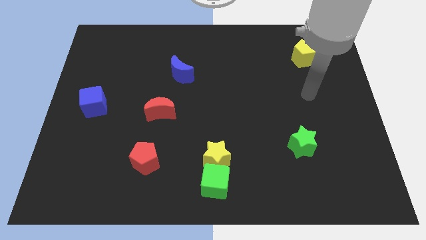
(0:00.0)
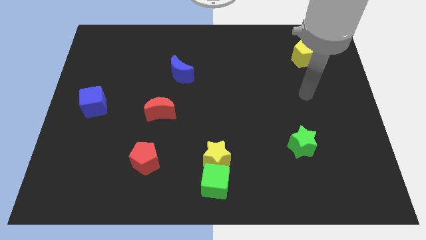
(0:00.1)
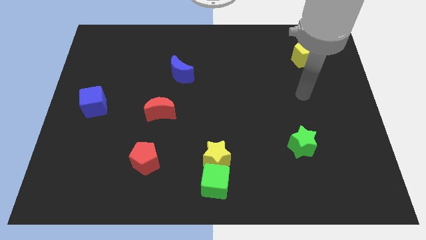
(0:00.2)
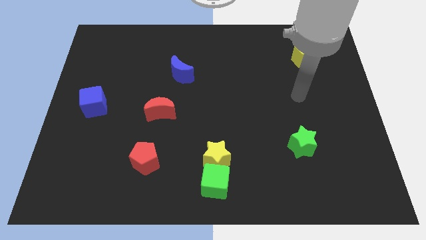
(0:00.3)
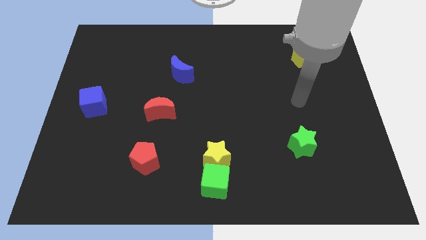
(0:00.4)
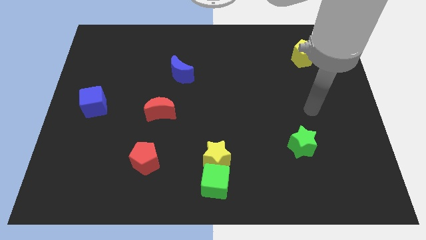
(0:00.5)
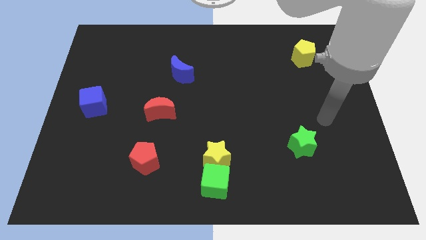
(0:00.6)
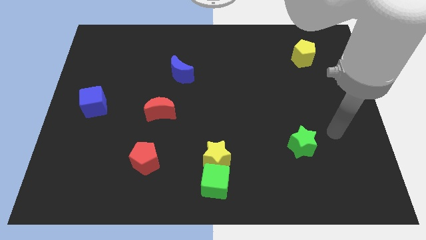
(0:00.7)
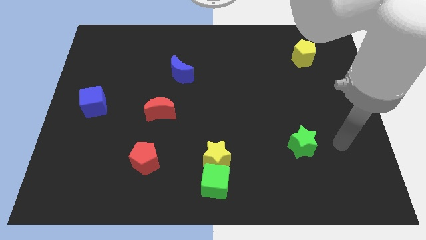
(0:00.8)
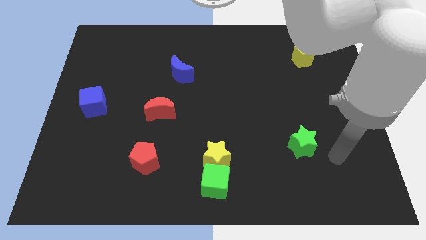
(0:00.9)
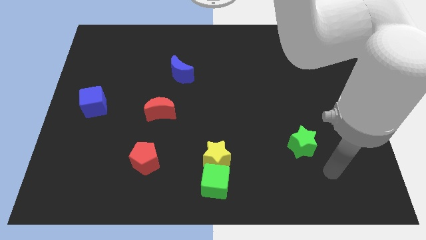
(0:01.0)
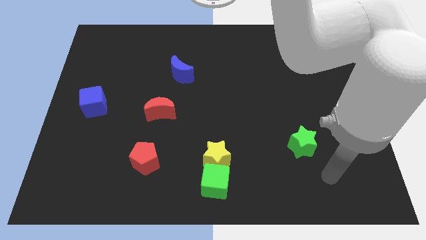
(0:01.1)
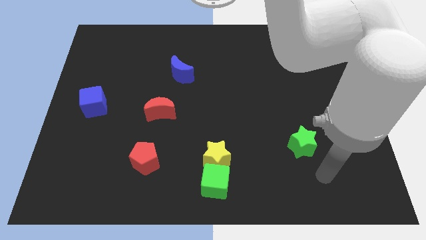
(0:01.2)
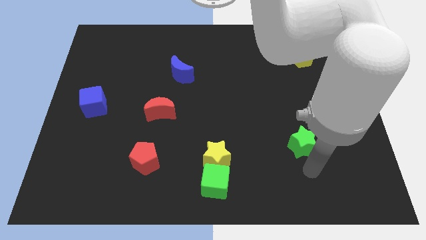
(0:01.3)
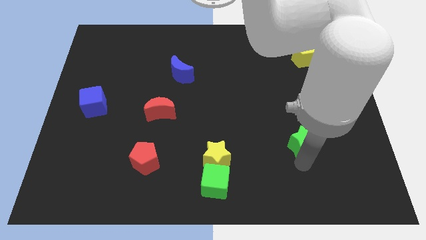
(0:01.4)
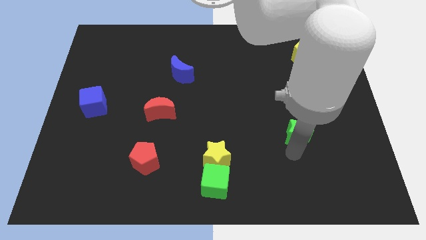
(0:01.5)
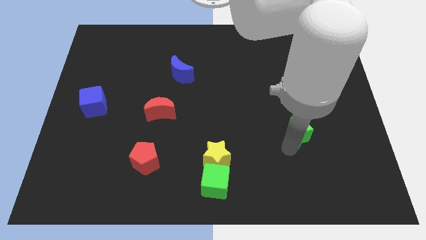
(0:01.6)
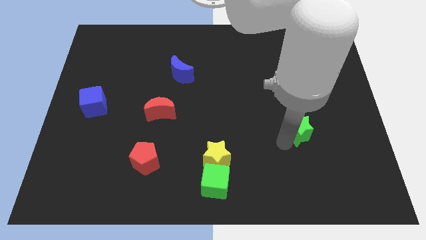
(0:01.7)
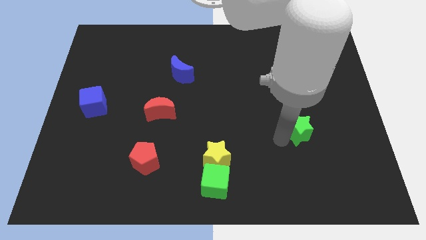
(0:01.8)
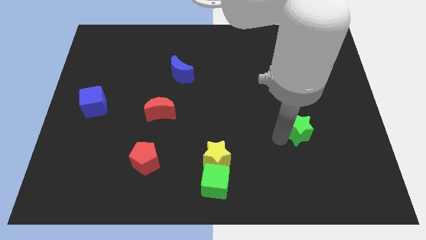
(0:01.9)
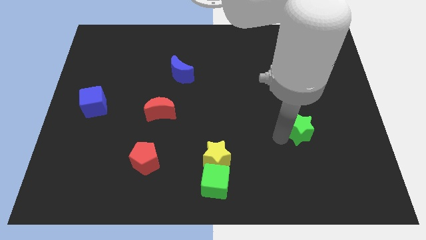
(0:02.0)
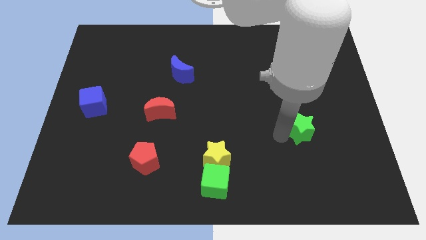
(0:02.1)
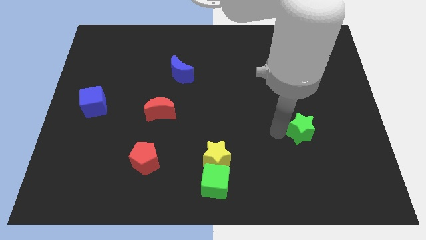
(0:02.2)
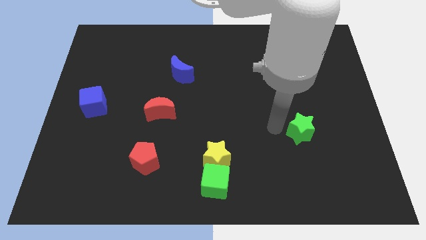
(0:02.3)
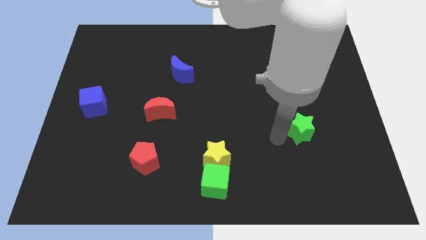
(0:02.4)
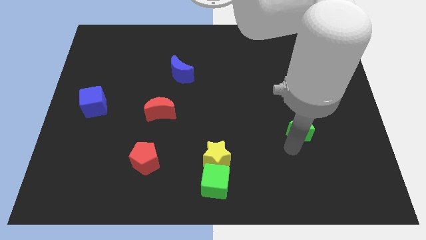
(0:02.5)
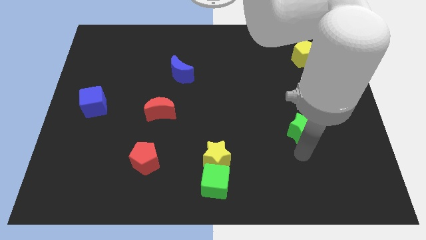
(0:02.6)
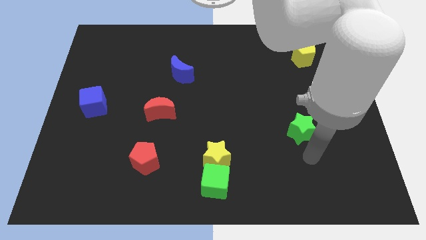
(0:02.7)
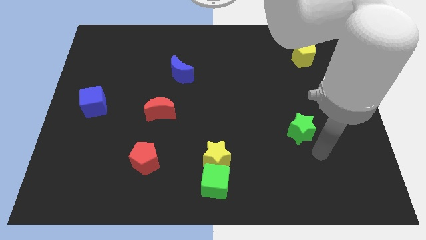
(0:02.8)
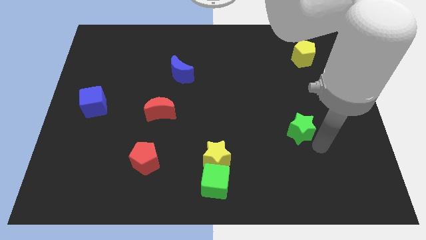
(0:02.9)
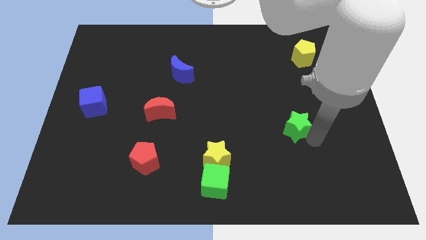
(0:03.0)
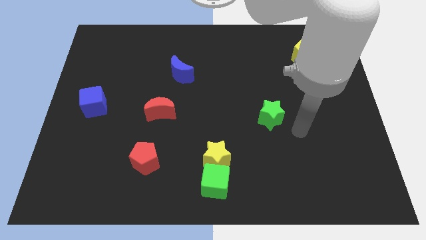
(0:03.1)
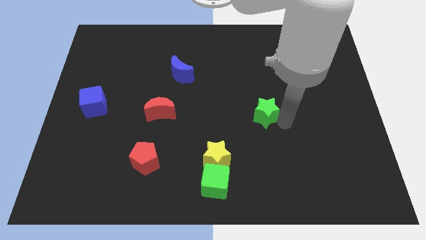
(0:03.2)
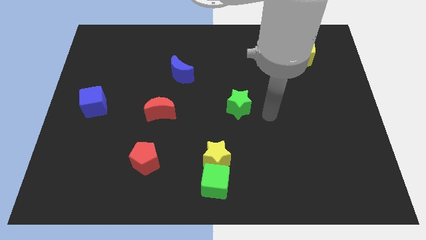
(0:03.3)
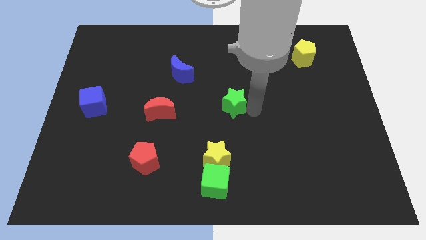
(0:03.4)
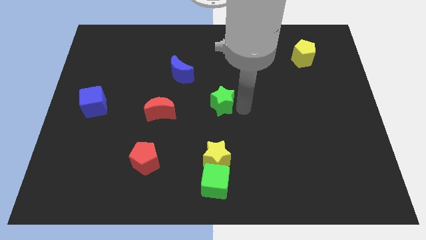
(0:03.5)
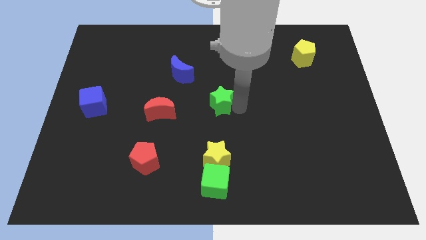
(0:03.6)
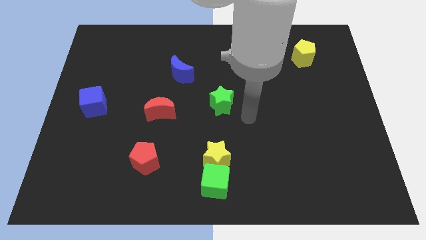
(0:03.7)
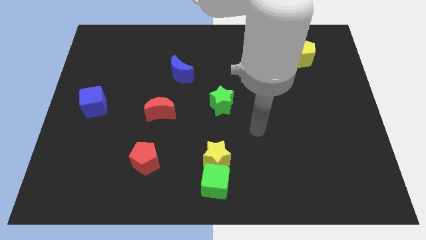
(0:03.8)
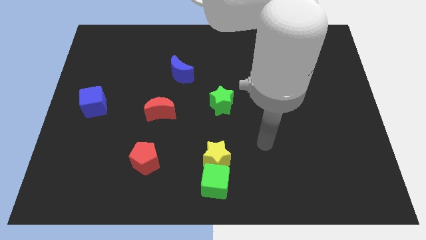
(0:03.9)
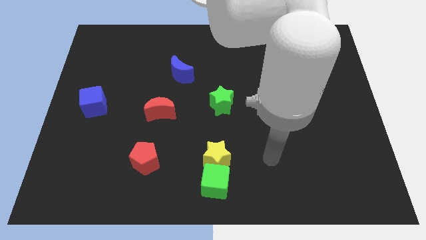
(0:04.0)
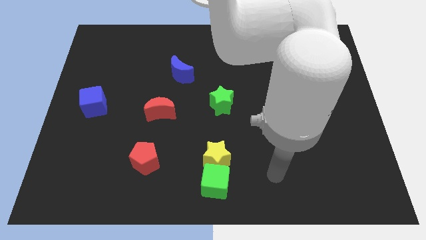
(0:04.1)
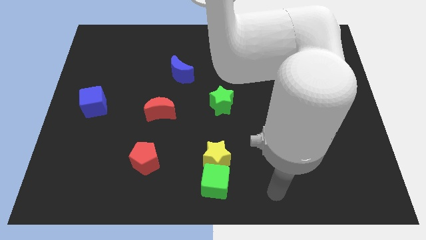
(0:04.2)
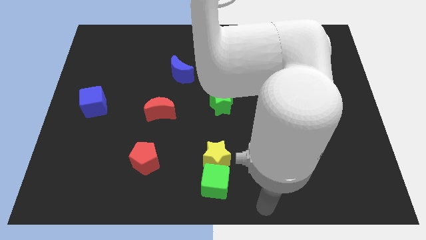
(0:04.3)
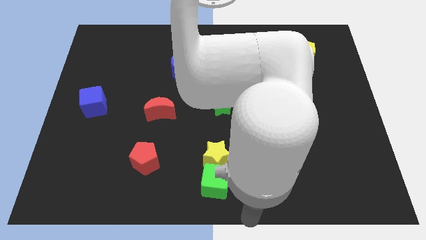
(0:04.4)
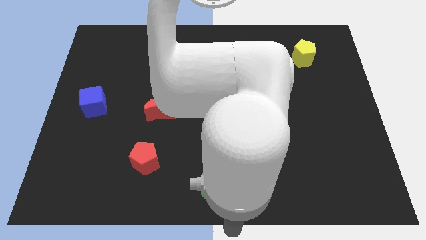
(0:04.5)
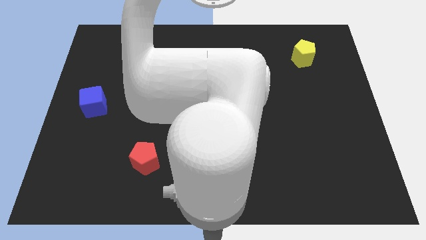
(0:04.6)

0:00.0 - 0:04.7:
push the green star towards the blue crescent

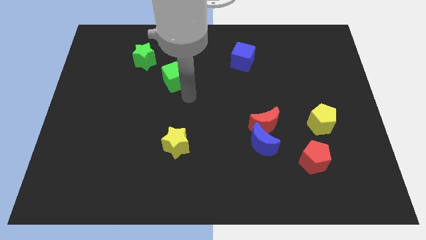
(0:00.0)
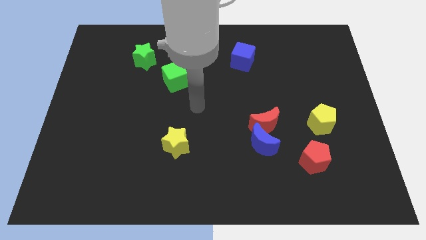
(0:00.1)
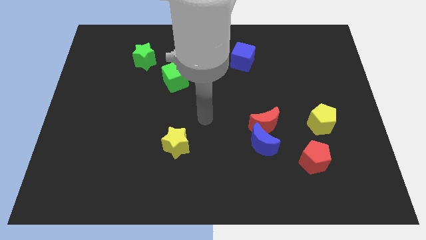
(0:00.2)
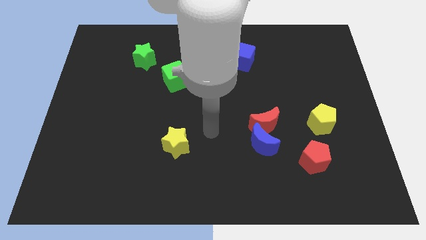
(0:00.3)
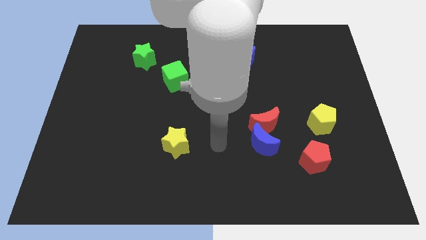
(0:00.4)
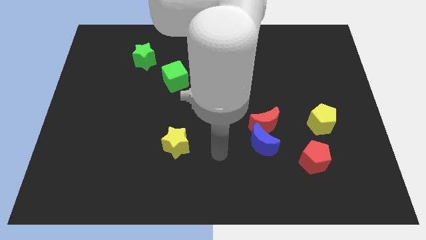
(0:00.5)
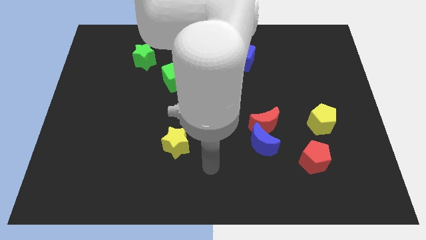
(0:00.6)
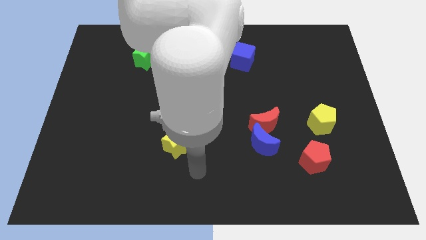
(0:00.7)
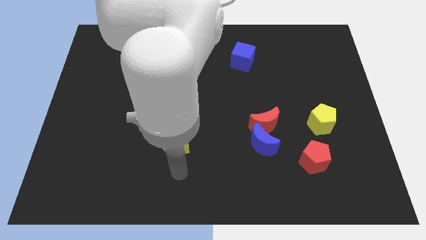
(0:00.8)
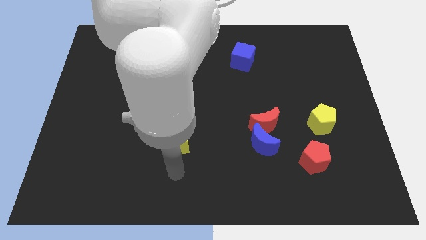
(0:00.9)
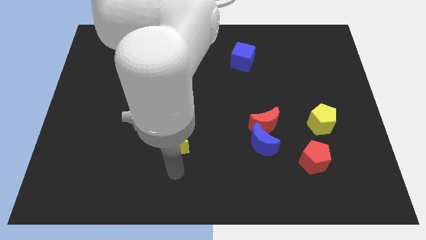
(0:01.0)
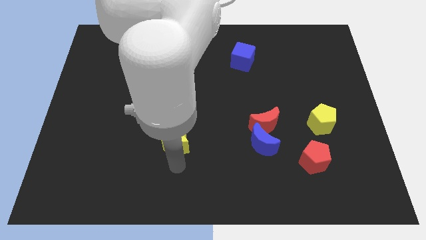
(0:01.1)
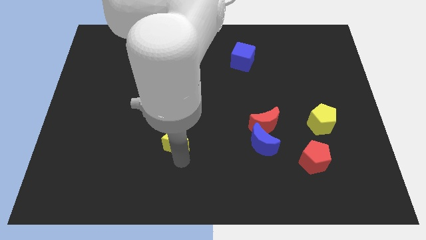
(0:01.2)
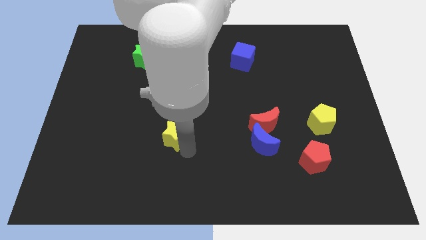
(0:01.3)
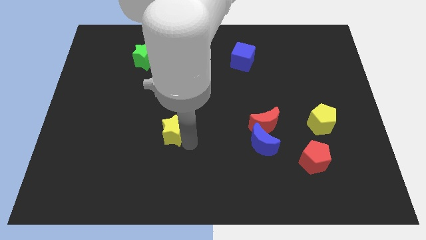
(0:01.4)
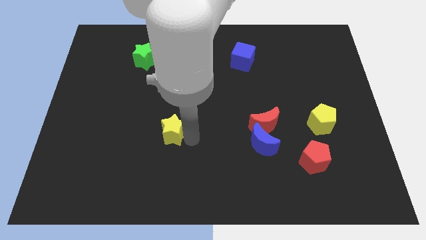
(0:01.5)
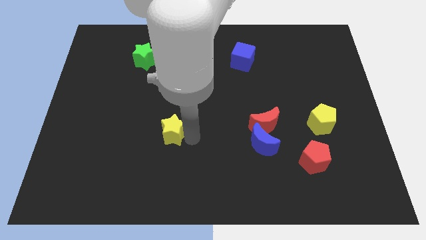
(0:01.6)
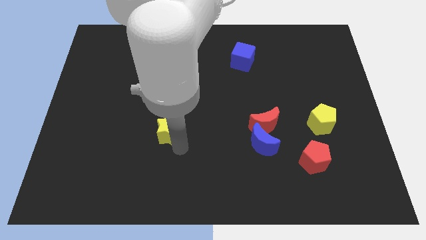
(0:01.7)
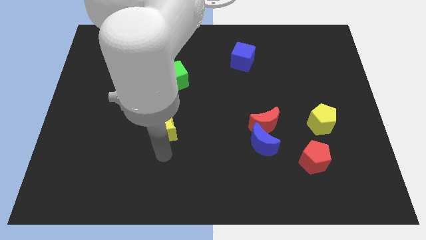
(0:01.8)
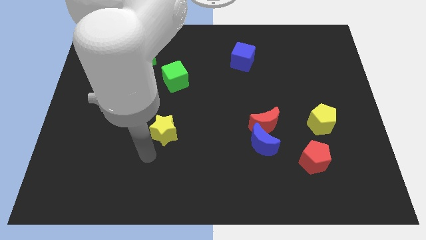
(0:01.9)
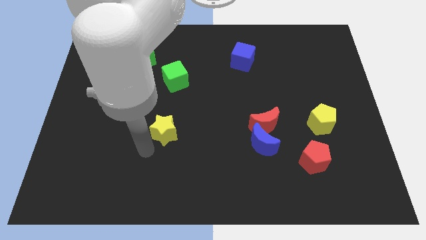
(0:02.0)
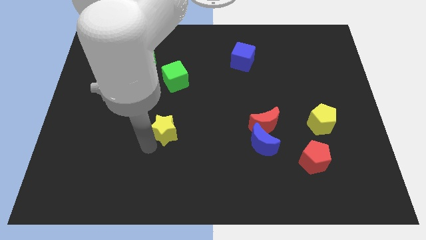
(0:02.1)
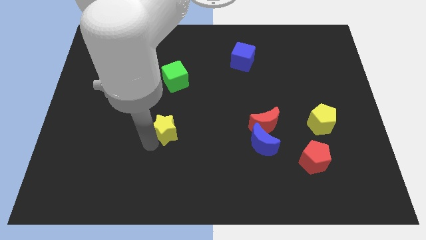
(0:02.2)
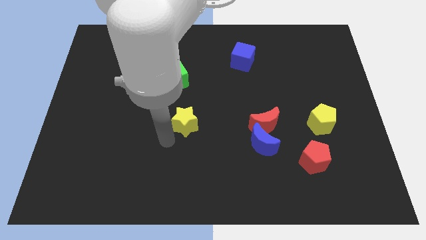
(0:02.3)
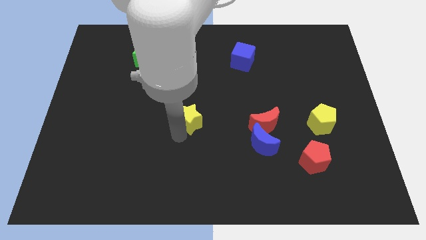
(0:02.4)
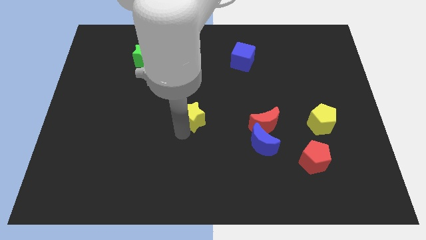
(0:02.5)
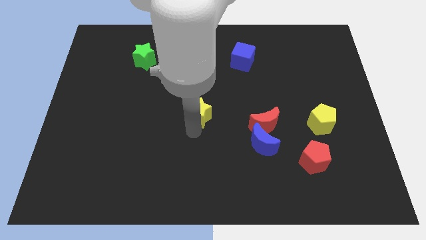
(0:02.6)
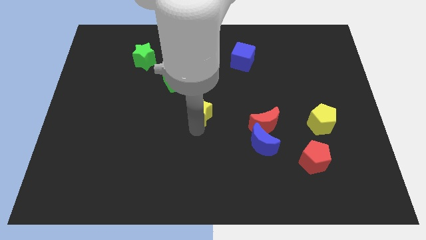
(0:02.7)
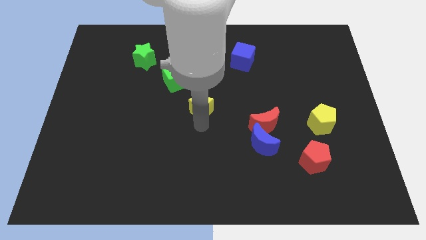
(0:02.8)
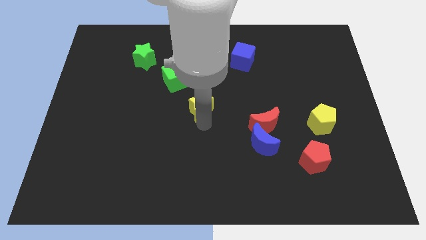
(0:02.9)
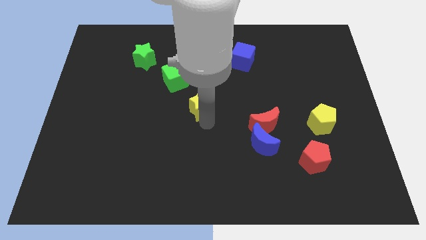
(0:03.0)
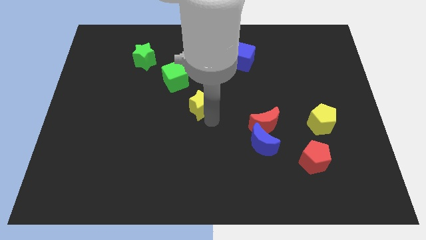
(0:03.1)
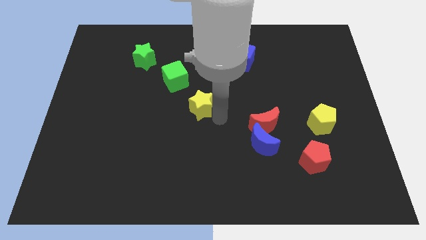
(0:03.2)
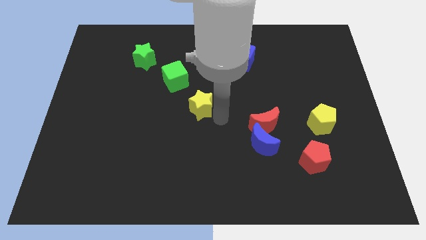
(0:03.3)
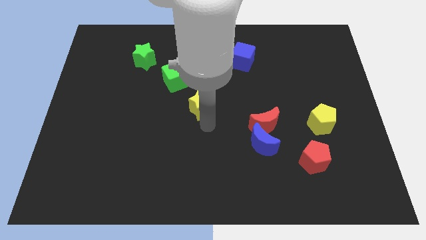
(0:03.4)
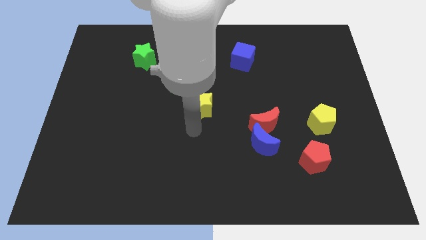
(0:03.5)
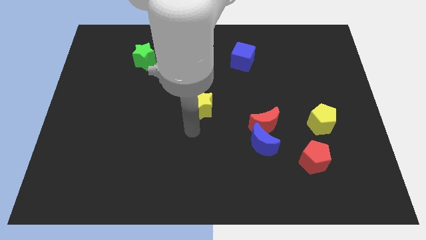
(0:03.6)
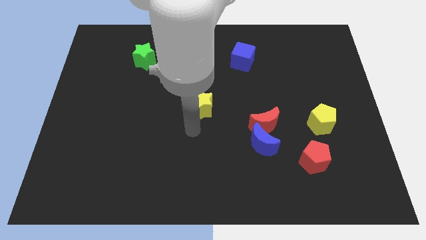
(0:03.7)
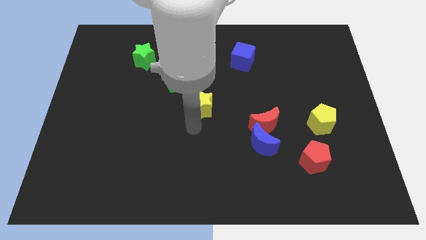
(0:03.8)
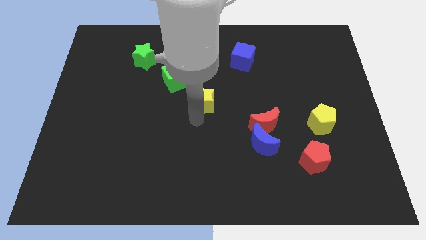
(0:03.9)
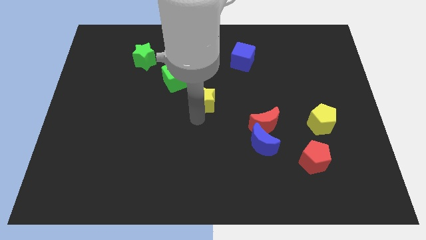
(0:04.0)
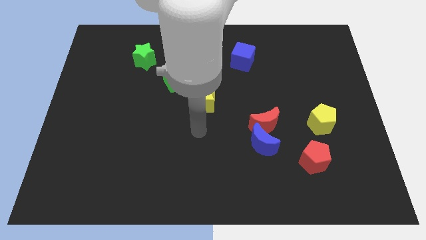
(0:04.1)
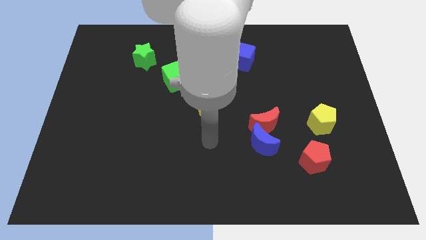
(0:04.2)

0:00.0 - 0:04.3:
push the yellow star to the bottom right of the green cube
